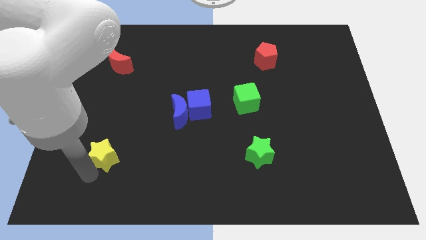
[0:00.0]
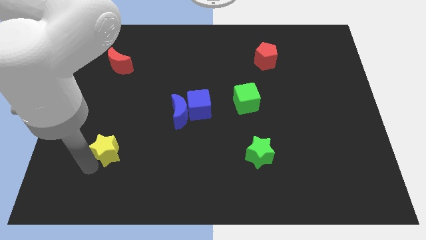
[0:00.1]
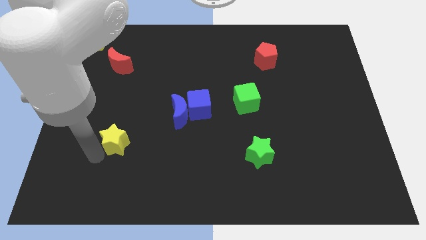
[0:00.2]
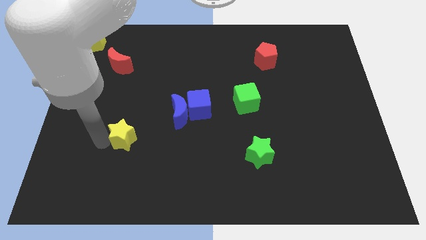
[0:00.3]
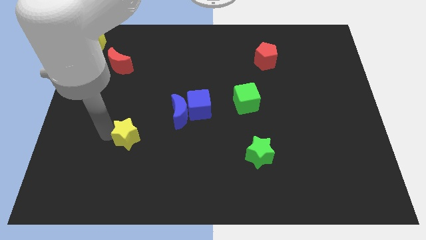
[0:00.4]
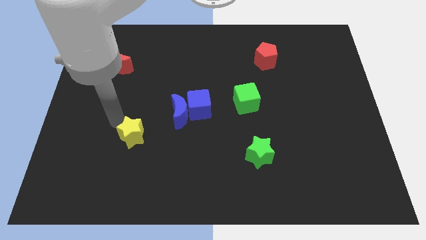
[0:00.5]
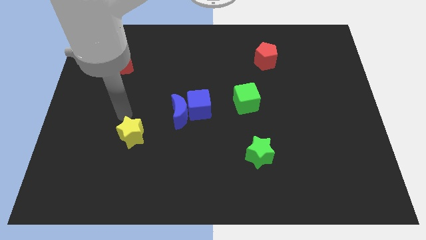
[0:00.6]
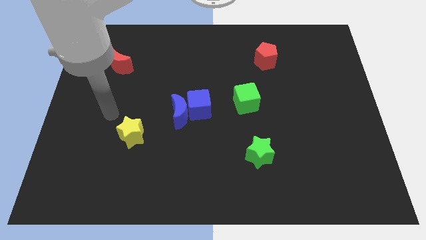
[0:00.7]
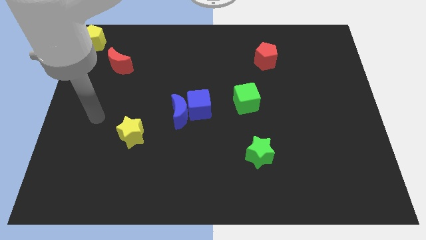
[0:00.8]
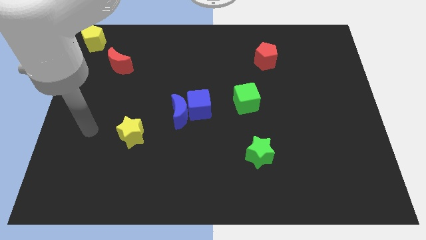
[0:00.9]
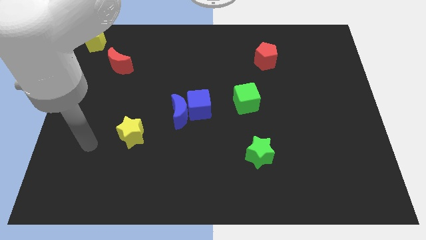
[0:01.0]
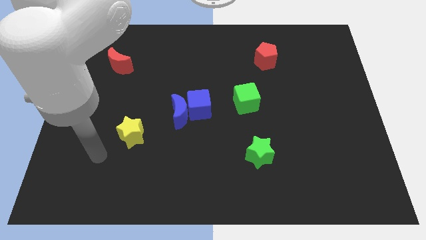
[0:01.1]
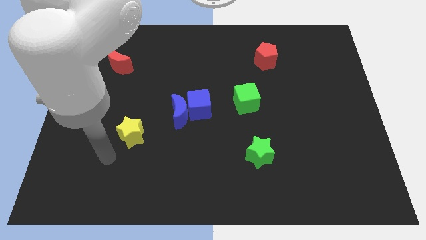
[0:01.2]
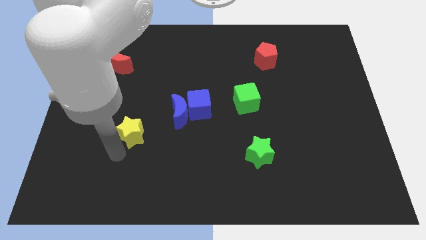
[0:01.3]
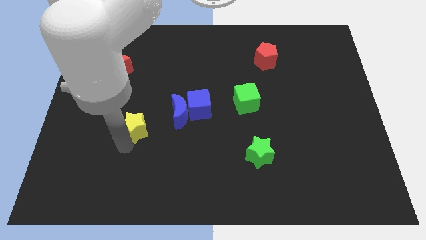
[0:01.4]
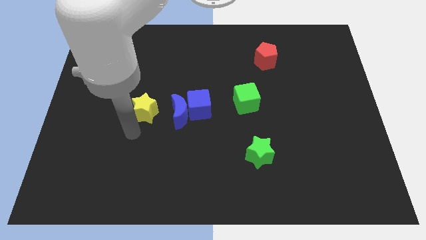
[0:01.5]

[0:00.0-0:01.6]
move the yellow star to the left of the blue crescent

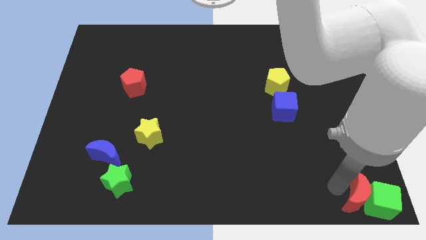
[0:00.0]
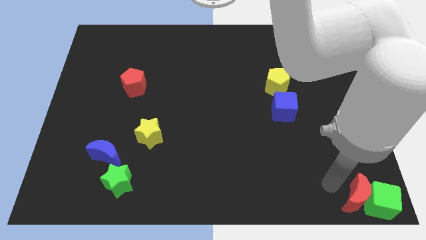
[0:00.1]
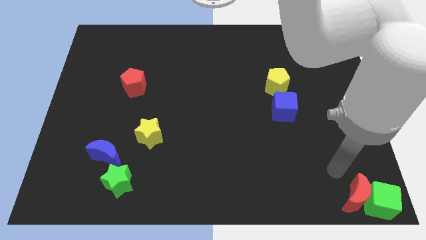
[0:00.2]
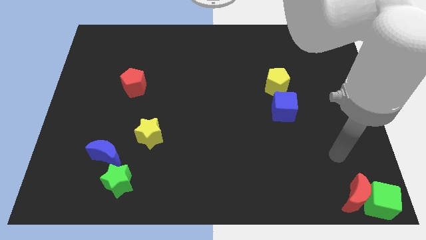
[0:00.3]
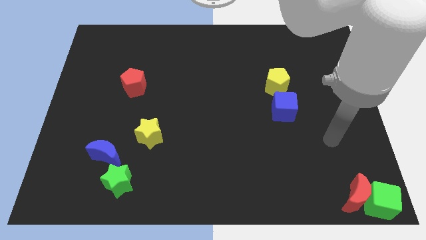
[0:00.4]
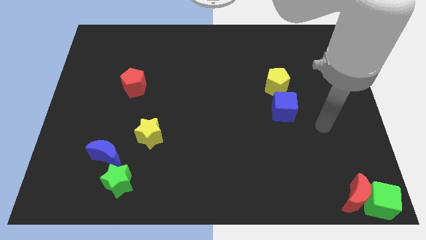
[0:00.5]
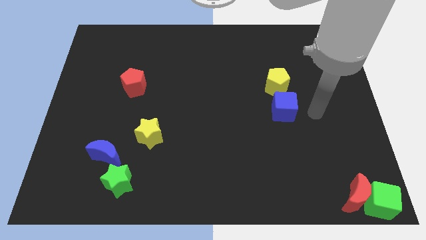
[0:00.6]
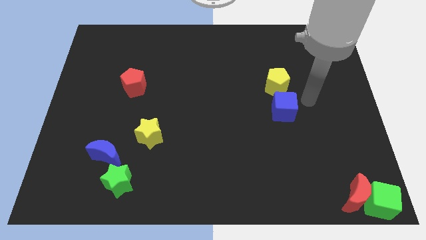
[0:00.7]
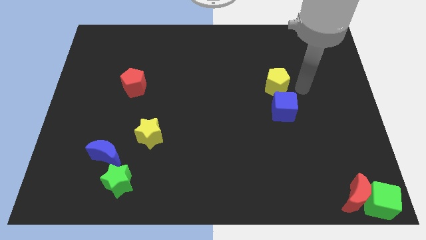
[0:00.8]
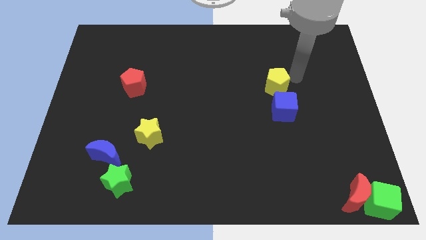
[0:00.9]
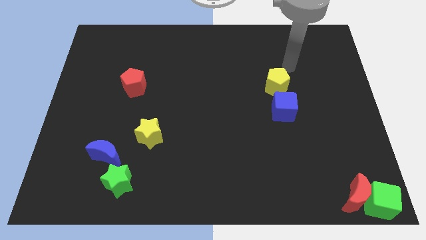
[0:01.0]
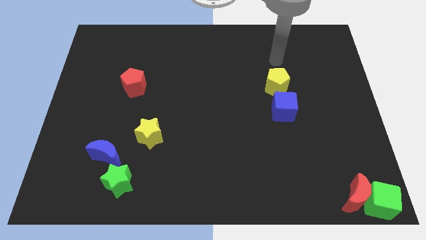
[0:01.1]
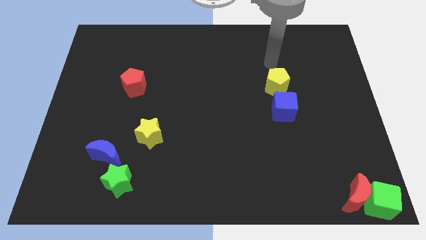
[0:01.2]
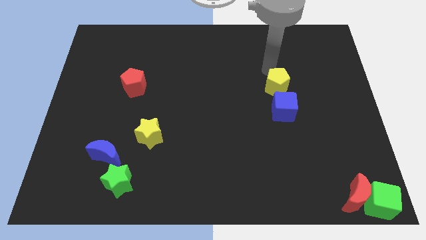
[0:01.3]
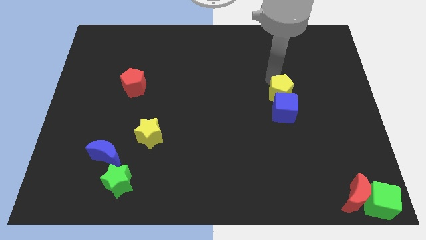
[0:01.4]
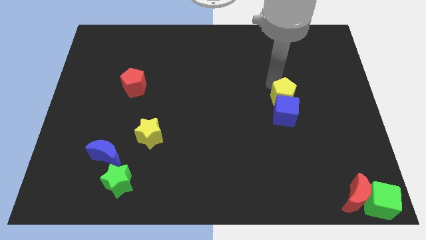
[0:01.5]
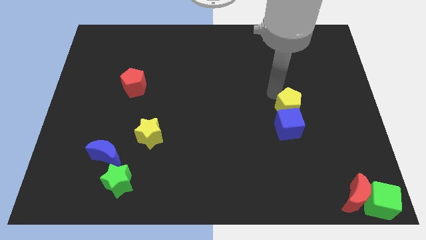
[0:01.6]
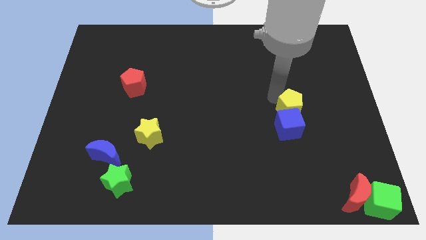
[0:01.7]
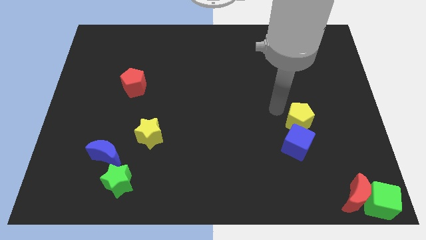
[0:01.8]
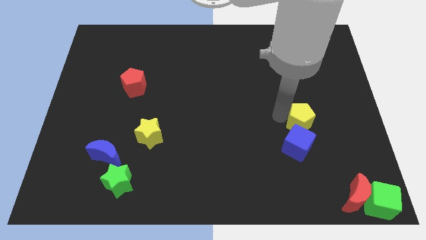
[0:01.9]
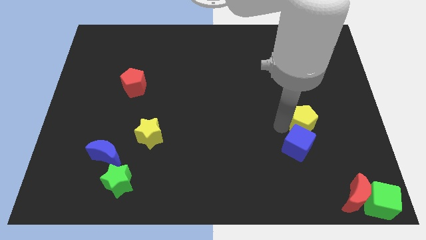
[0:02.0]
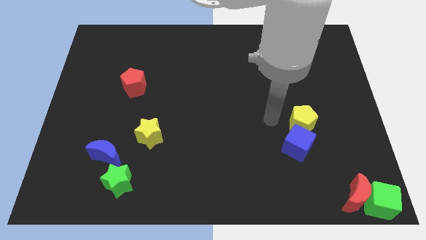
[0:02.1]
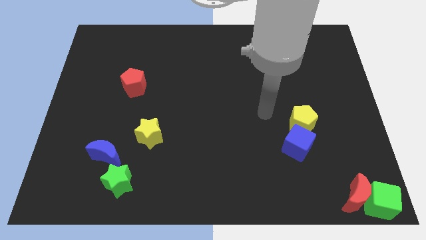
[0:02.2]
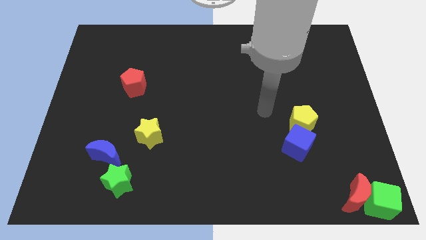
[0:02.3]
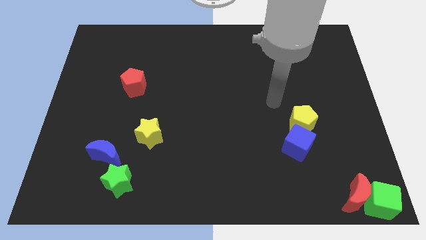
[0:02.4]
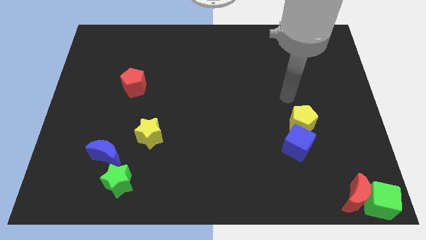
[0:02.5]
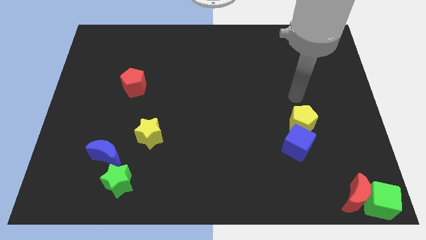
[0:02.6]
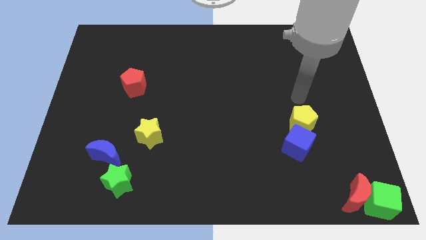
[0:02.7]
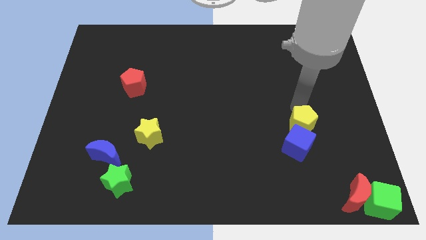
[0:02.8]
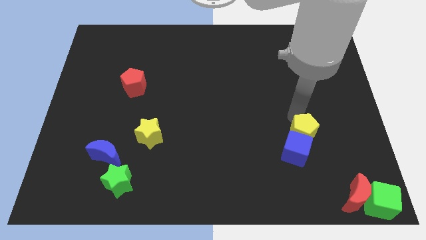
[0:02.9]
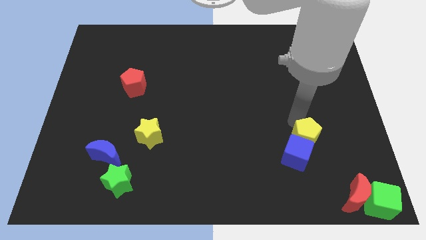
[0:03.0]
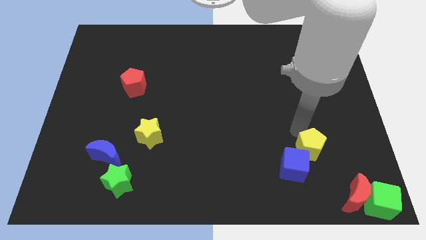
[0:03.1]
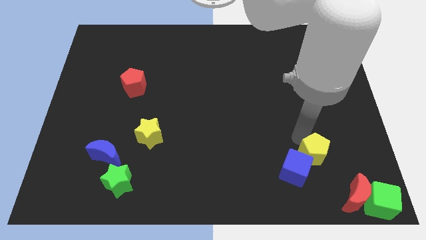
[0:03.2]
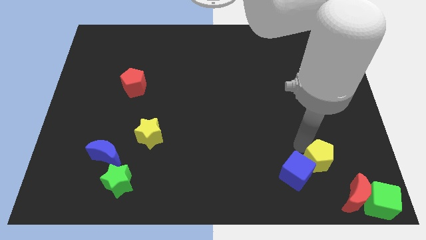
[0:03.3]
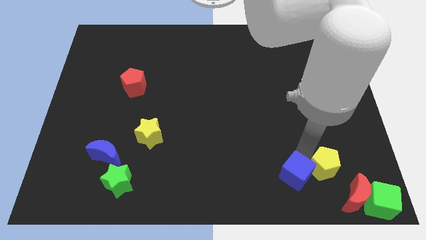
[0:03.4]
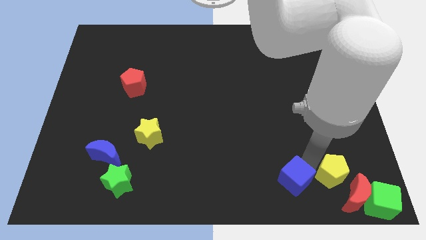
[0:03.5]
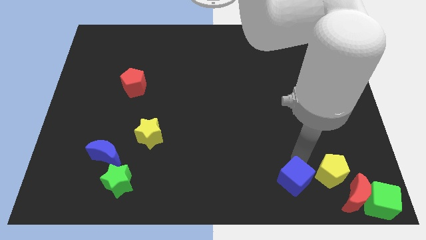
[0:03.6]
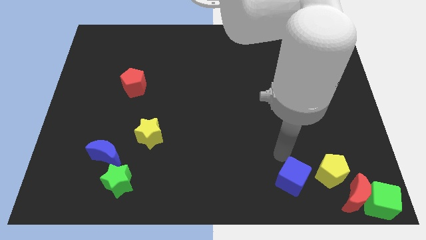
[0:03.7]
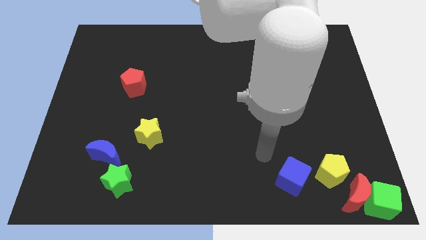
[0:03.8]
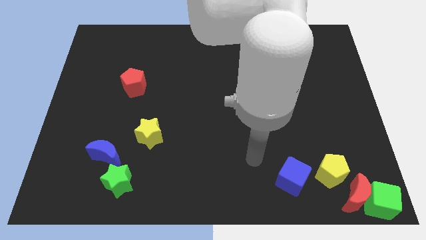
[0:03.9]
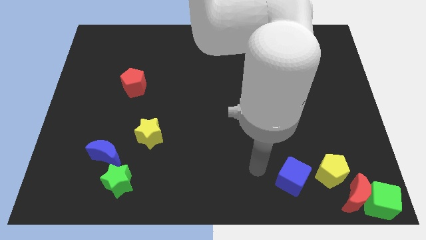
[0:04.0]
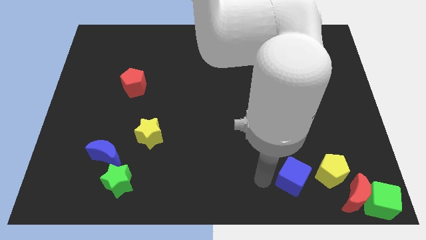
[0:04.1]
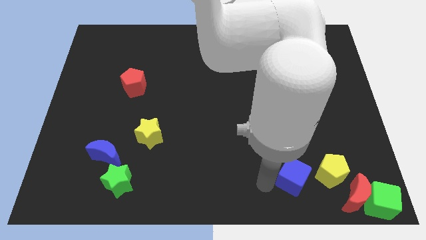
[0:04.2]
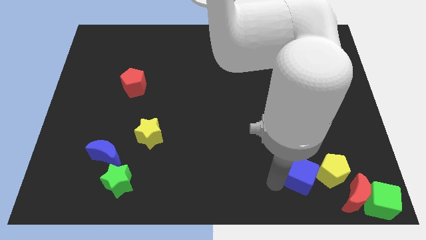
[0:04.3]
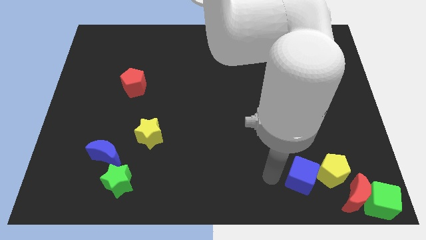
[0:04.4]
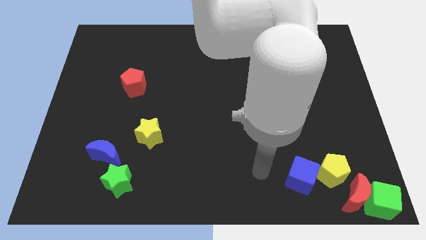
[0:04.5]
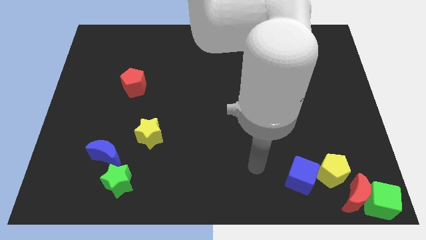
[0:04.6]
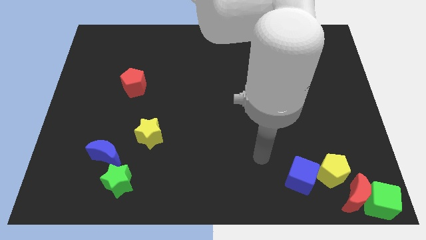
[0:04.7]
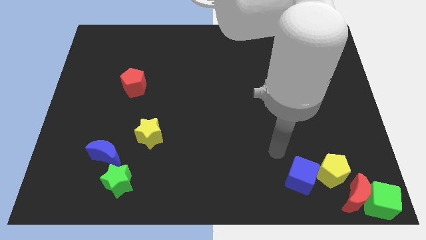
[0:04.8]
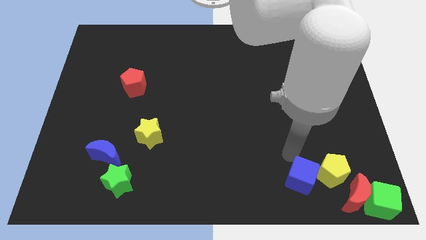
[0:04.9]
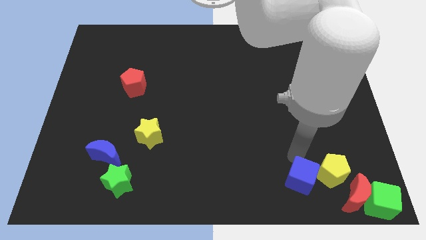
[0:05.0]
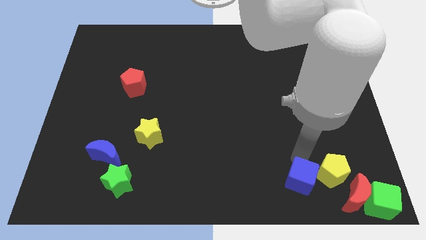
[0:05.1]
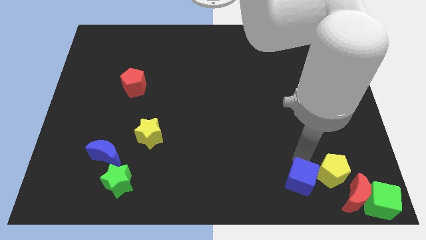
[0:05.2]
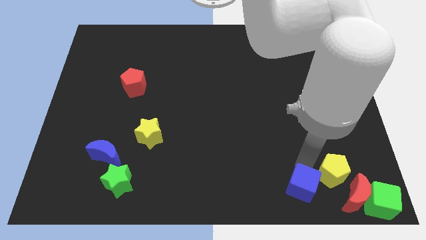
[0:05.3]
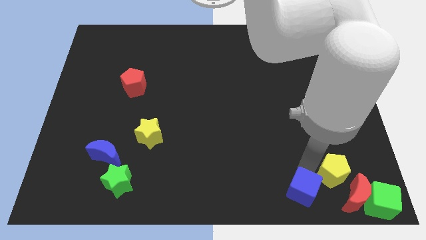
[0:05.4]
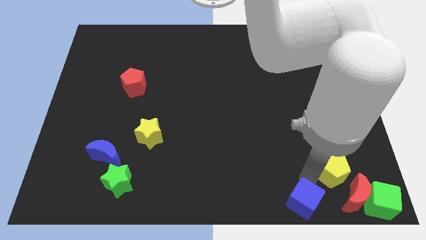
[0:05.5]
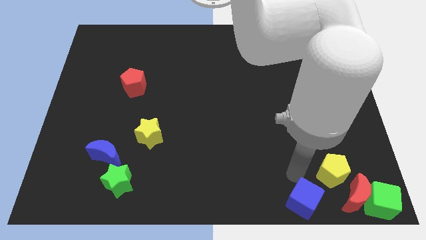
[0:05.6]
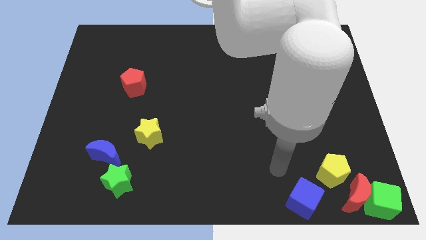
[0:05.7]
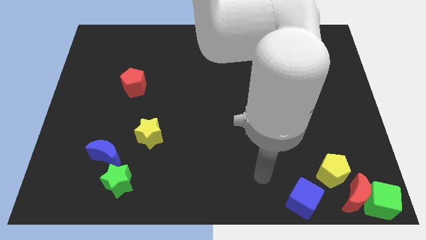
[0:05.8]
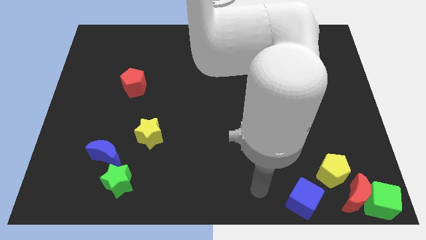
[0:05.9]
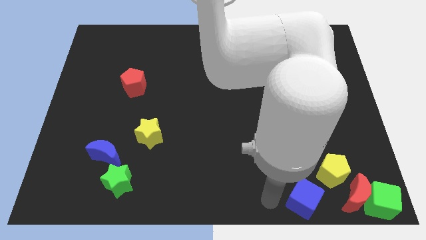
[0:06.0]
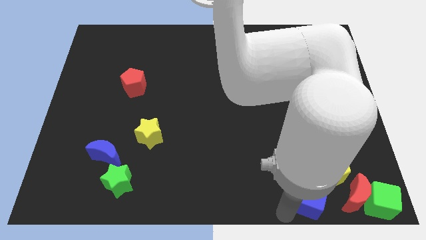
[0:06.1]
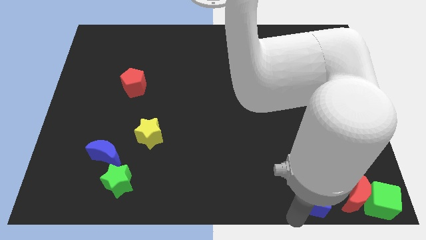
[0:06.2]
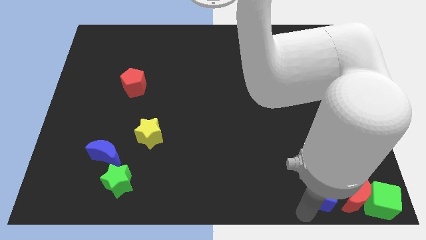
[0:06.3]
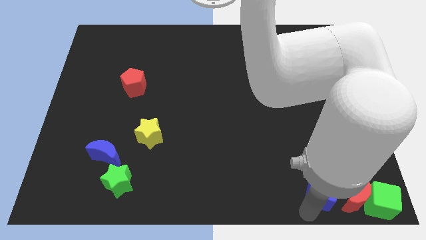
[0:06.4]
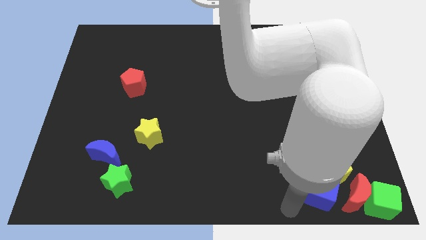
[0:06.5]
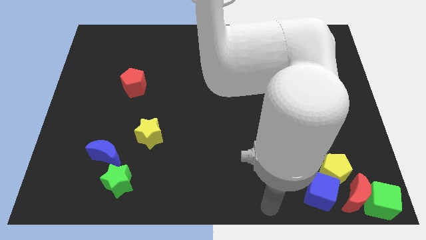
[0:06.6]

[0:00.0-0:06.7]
drag the blue cube and yellow pentagon towards the bottom right of the board

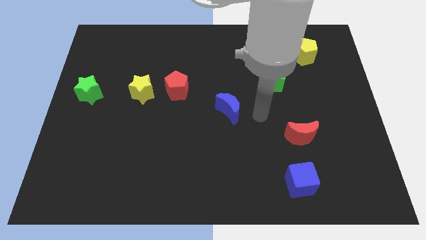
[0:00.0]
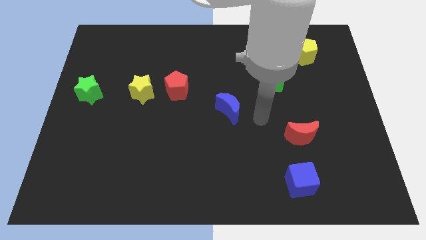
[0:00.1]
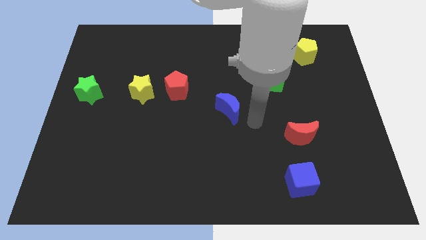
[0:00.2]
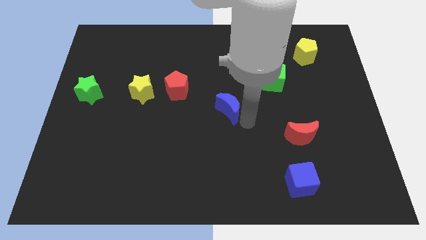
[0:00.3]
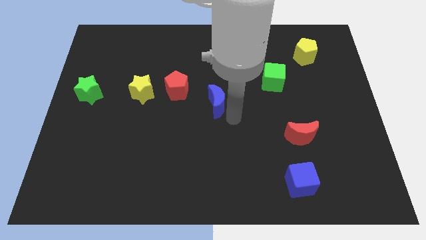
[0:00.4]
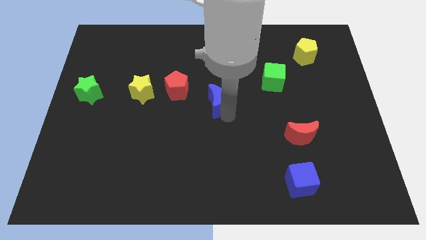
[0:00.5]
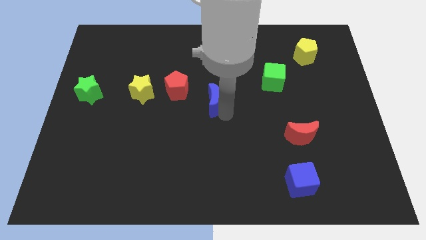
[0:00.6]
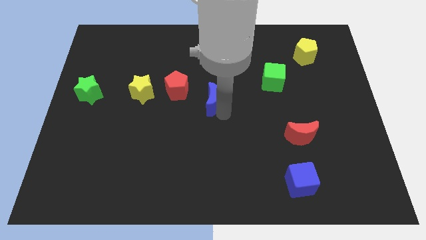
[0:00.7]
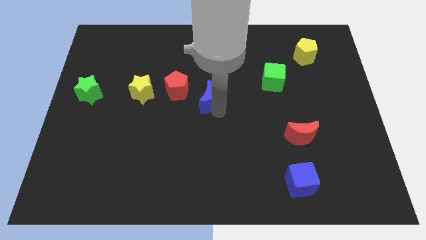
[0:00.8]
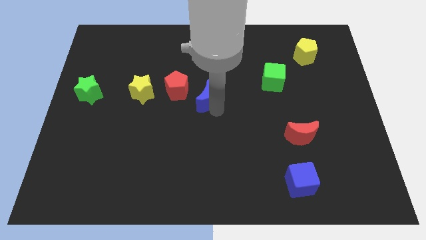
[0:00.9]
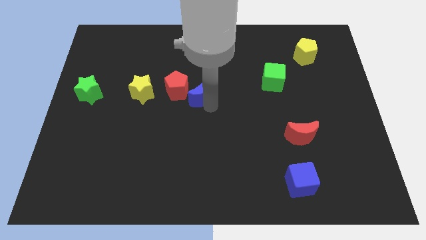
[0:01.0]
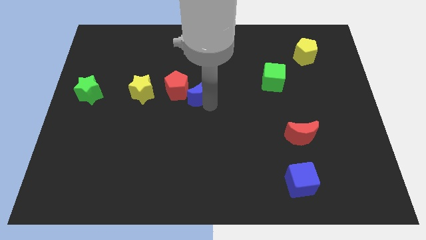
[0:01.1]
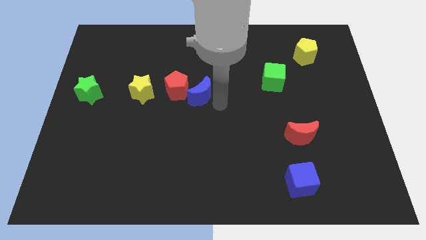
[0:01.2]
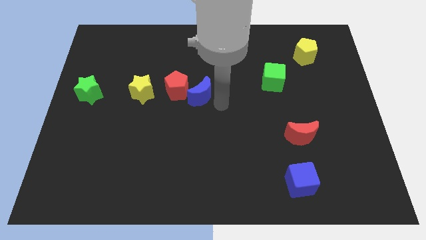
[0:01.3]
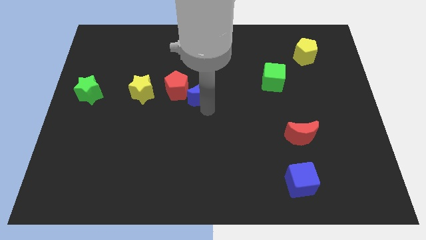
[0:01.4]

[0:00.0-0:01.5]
push the blue crescent to the right of the red pentagon
